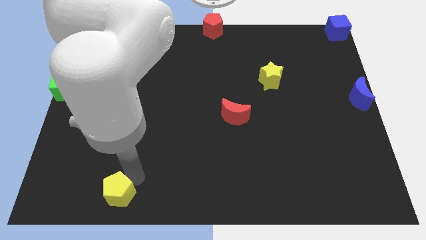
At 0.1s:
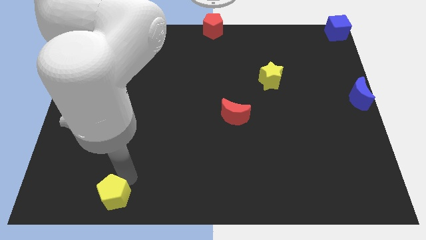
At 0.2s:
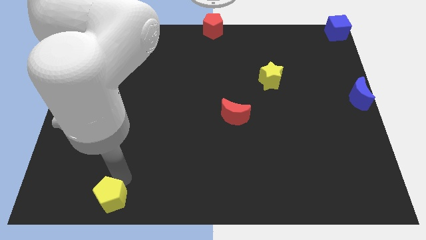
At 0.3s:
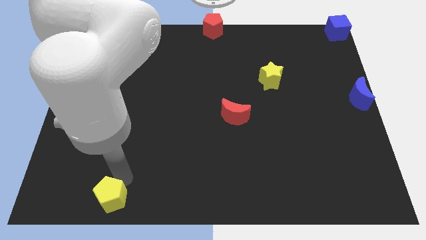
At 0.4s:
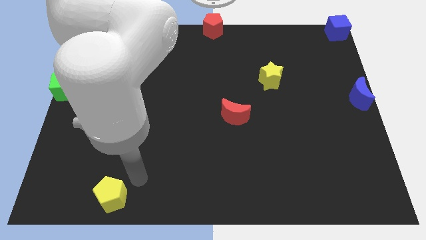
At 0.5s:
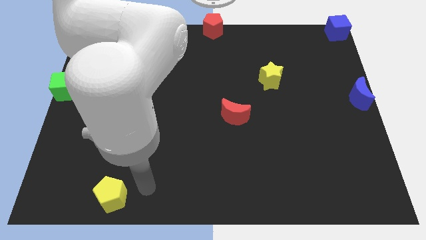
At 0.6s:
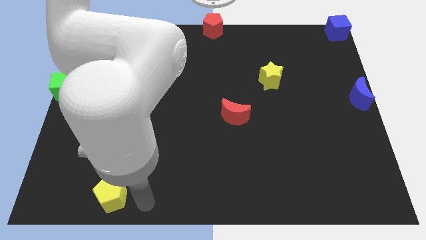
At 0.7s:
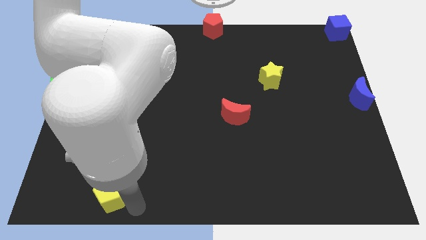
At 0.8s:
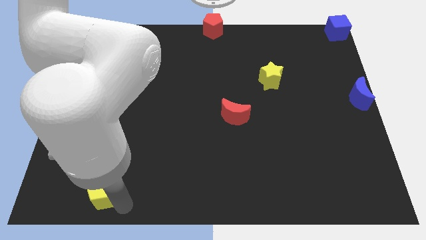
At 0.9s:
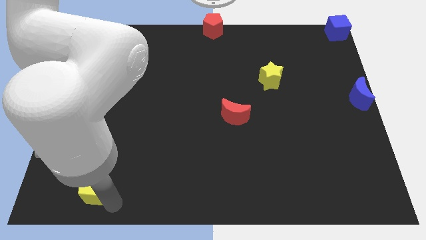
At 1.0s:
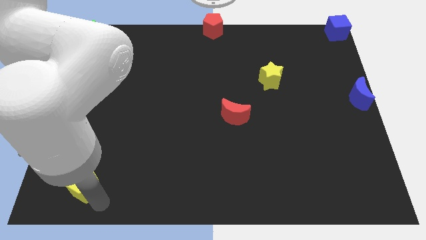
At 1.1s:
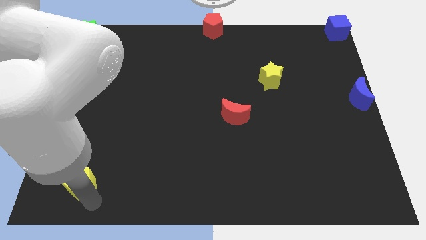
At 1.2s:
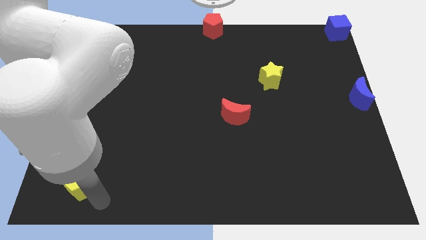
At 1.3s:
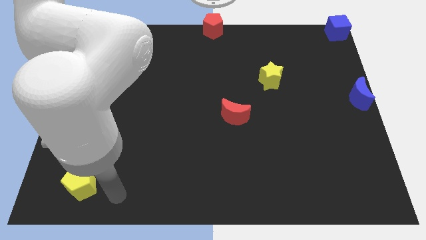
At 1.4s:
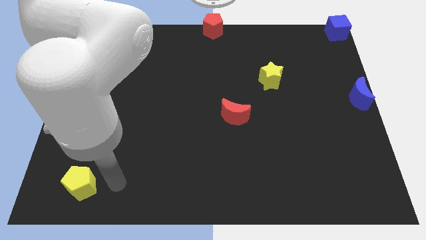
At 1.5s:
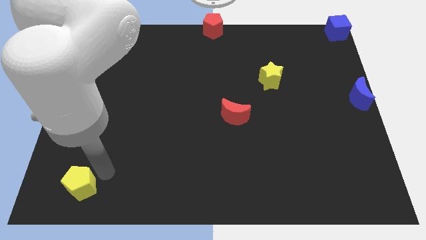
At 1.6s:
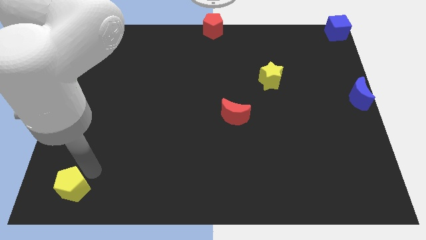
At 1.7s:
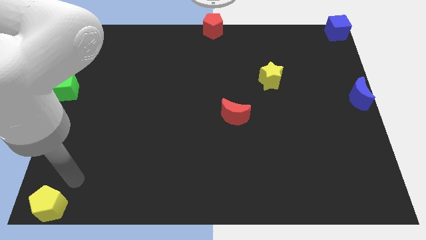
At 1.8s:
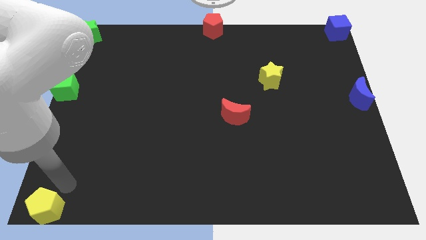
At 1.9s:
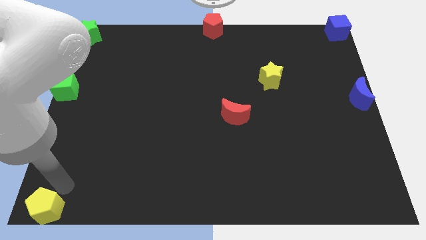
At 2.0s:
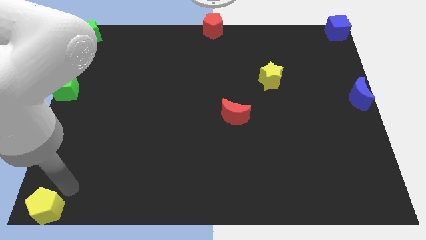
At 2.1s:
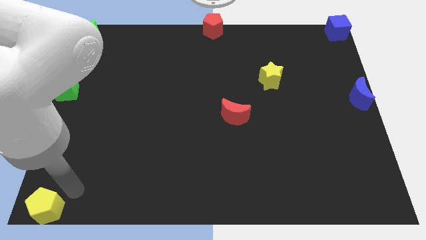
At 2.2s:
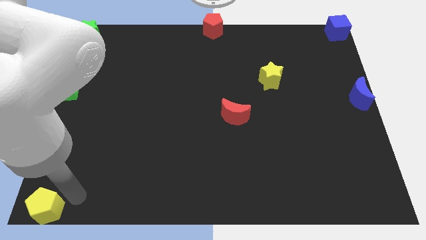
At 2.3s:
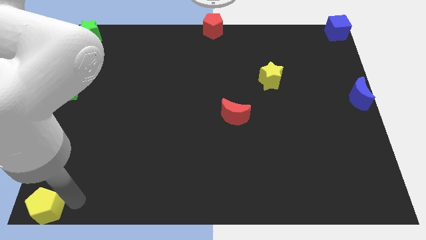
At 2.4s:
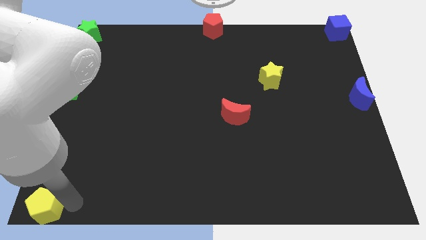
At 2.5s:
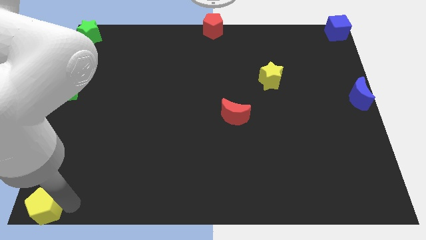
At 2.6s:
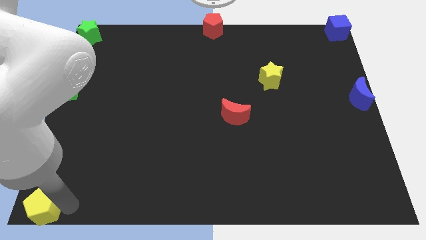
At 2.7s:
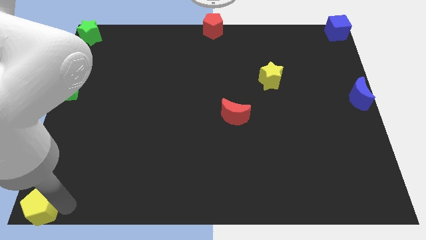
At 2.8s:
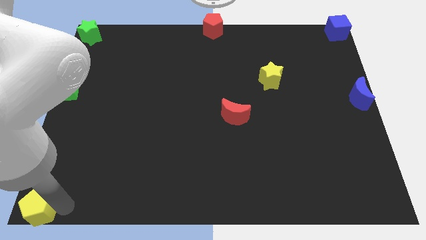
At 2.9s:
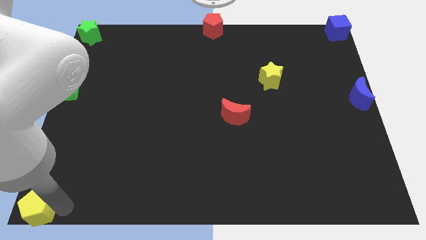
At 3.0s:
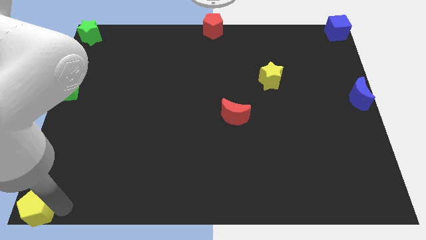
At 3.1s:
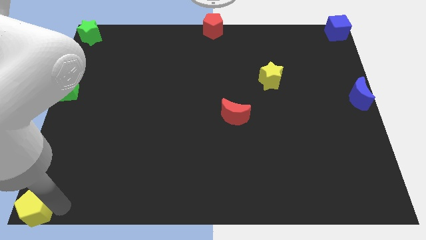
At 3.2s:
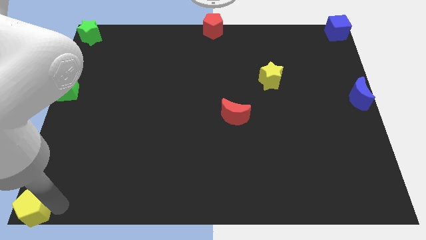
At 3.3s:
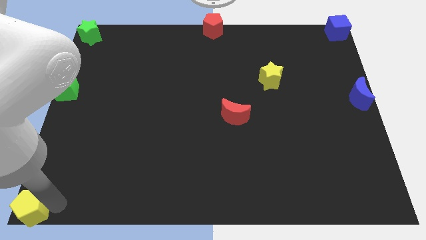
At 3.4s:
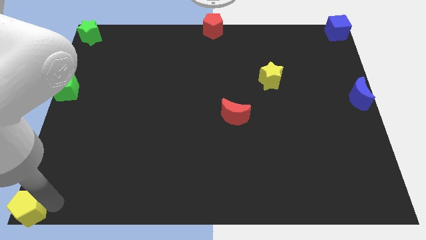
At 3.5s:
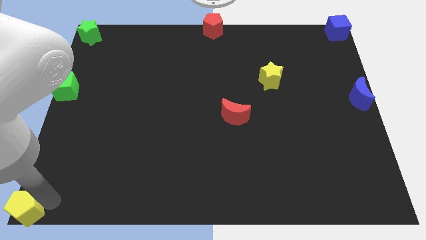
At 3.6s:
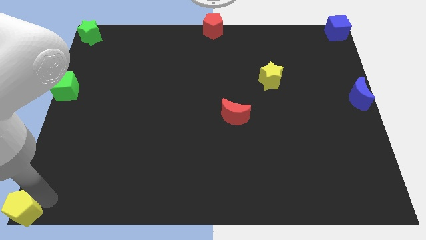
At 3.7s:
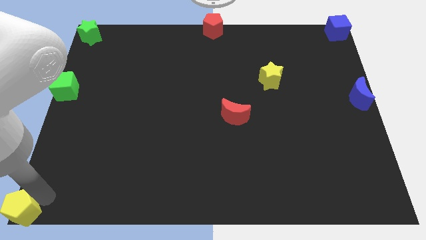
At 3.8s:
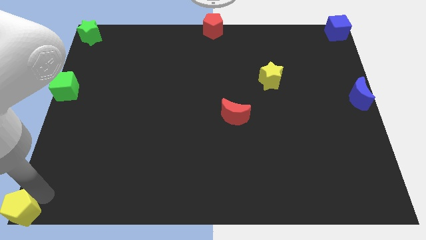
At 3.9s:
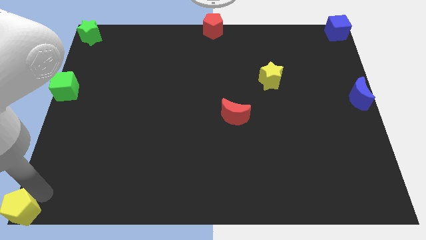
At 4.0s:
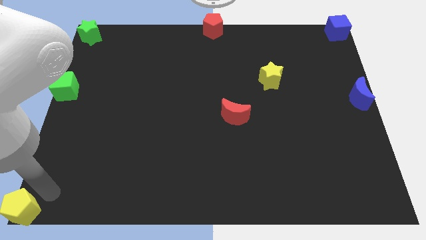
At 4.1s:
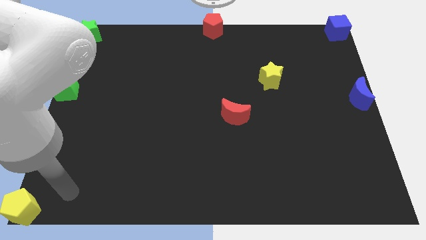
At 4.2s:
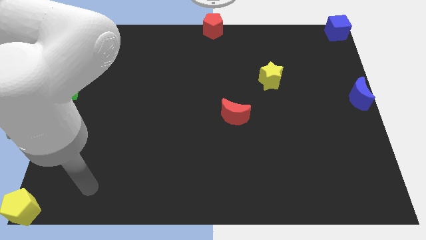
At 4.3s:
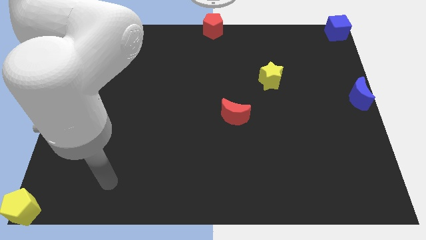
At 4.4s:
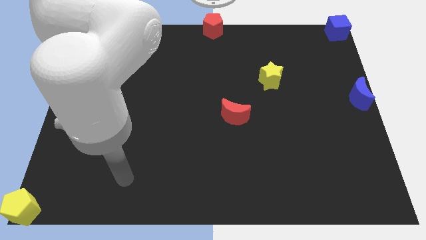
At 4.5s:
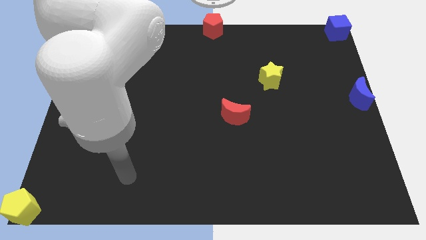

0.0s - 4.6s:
place the yellow pentagon to the bottom left corner

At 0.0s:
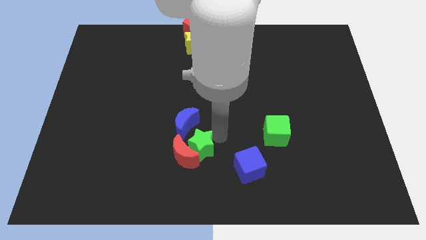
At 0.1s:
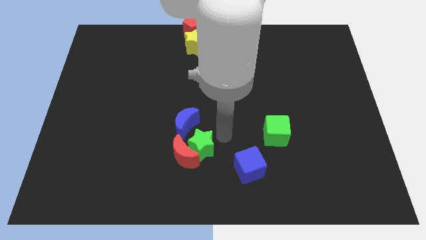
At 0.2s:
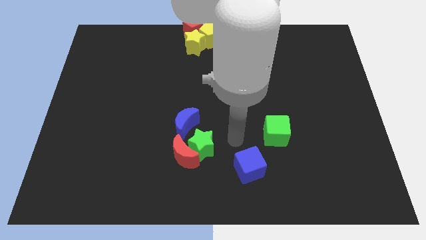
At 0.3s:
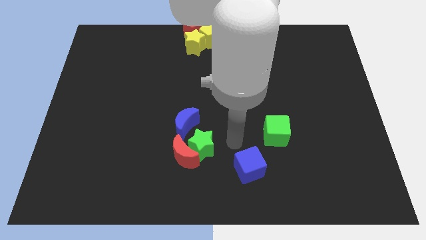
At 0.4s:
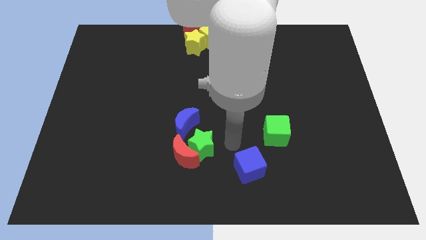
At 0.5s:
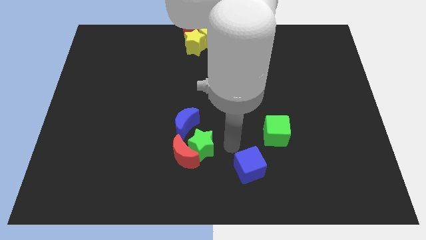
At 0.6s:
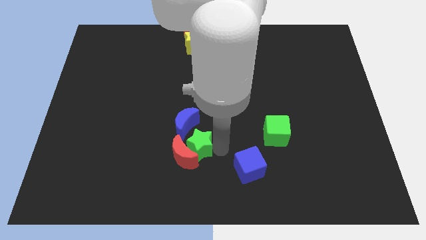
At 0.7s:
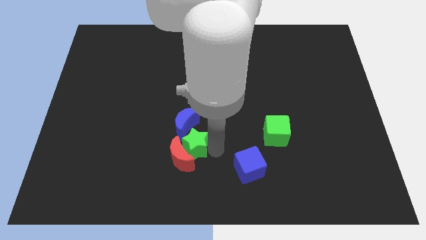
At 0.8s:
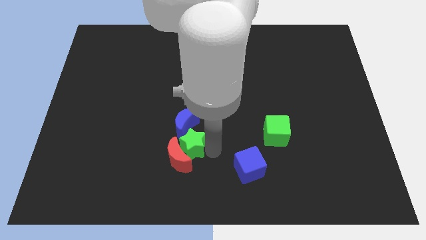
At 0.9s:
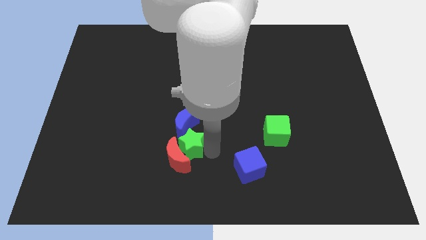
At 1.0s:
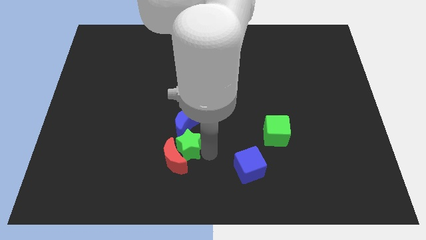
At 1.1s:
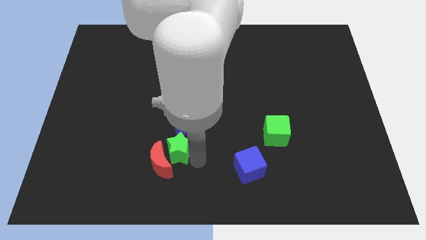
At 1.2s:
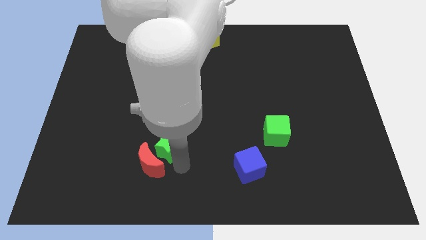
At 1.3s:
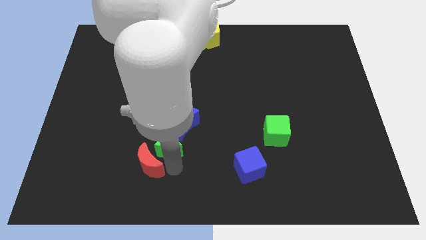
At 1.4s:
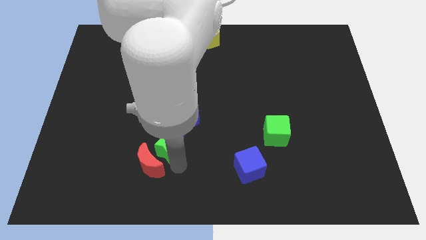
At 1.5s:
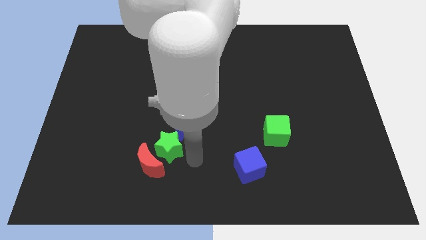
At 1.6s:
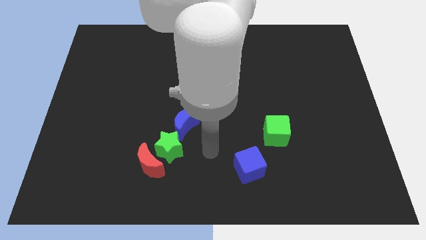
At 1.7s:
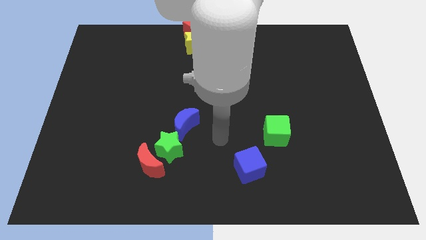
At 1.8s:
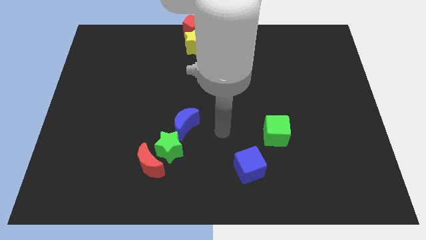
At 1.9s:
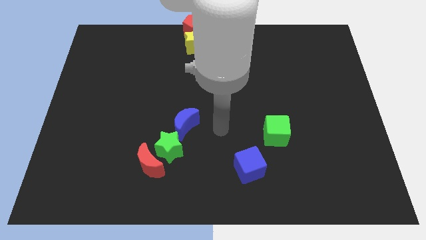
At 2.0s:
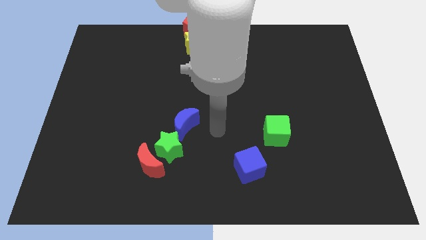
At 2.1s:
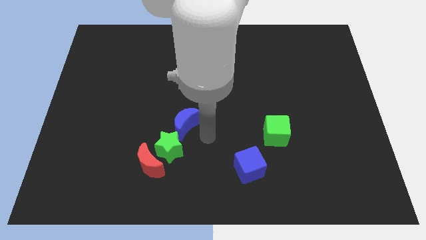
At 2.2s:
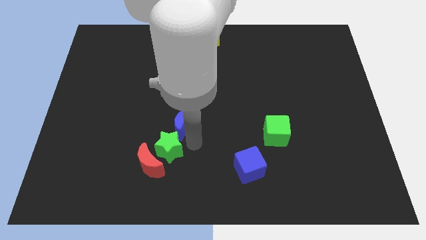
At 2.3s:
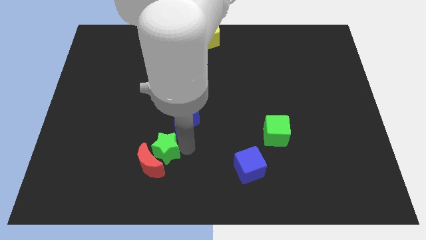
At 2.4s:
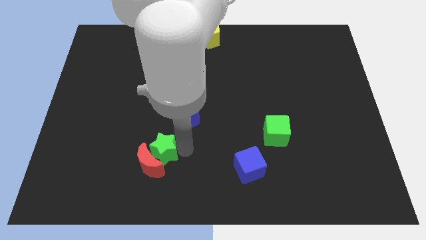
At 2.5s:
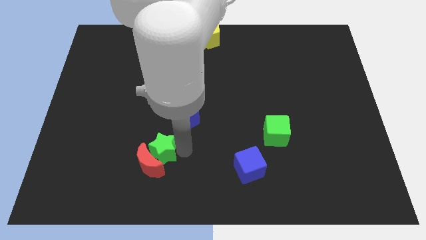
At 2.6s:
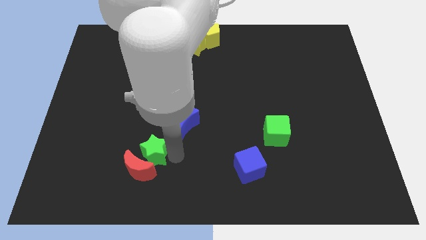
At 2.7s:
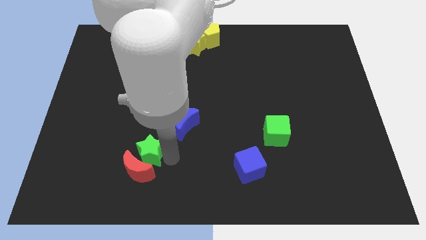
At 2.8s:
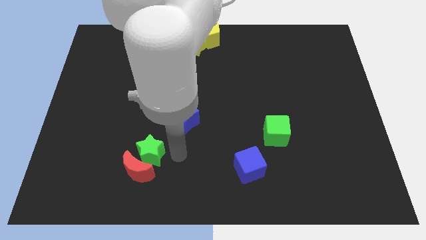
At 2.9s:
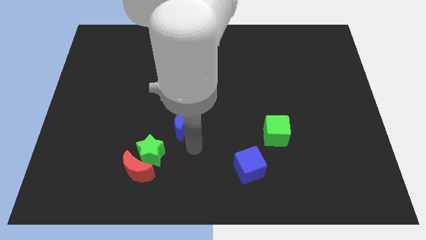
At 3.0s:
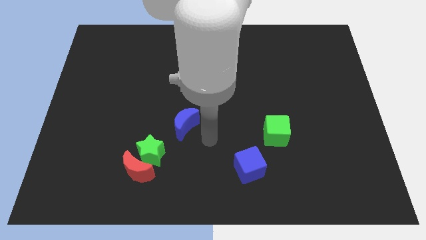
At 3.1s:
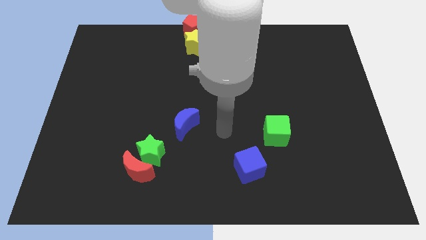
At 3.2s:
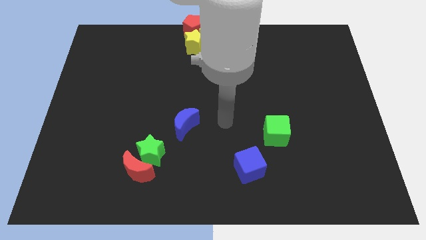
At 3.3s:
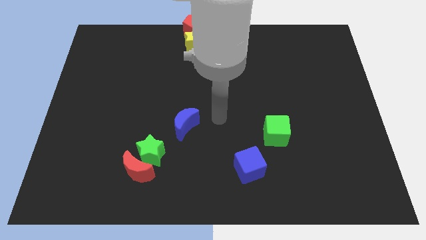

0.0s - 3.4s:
drag green star along with the red crescent diagonally bottom left to the blue moon

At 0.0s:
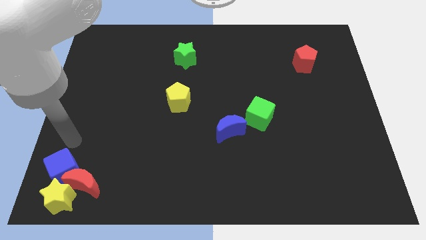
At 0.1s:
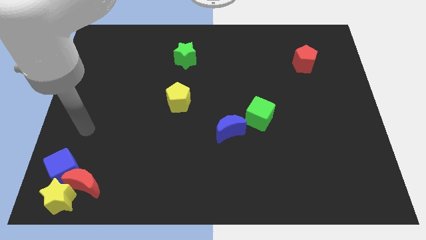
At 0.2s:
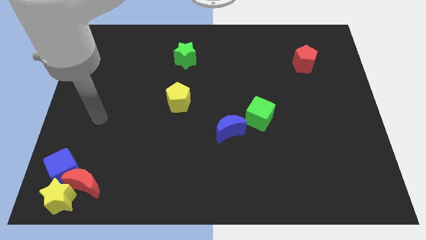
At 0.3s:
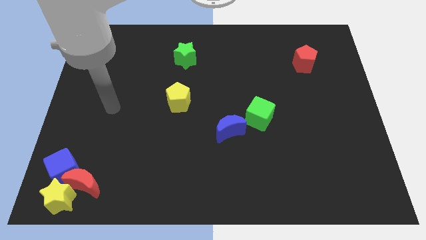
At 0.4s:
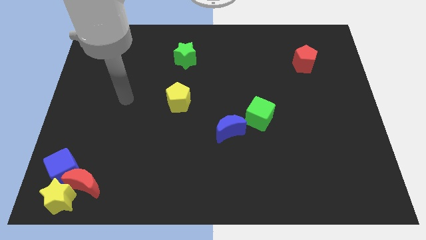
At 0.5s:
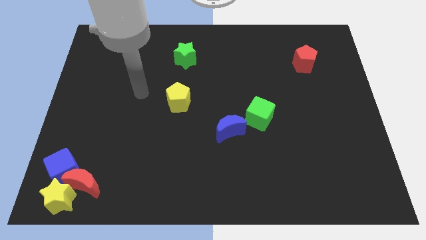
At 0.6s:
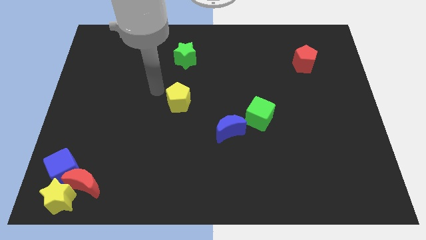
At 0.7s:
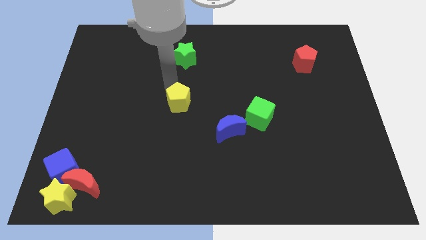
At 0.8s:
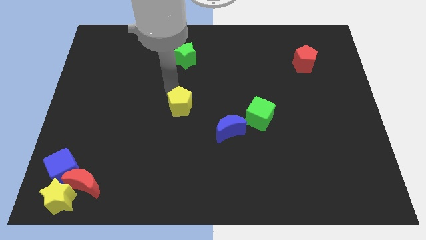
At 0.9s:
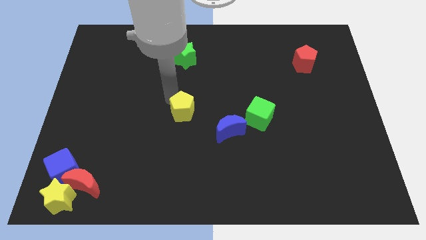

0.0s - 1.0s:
move the yellow pentagon center of the board

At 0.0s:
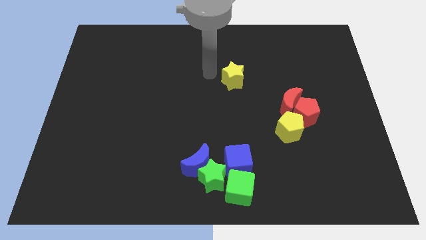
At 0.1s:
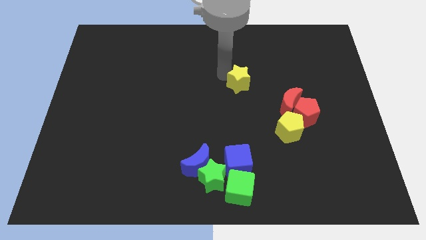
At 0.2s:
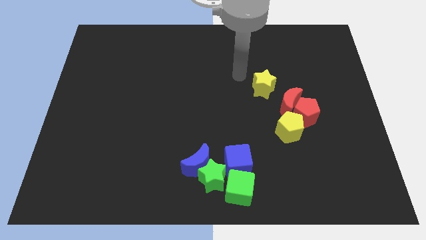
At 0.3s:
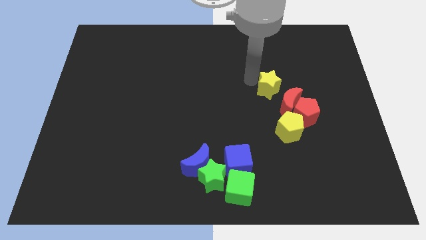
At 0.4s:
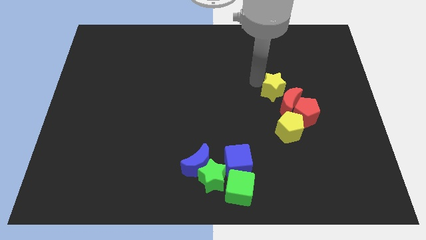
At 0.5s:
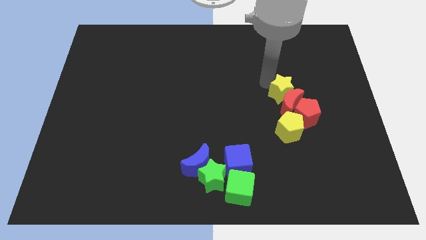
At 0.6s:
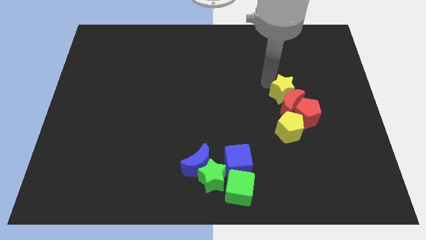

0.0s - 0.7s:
push the yellow star above the red crescent
